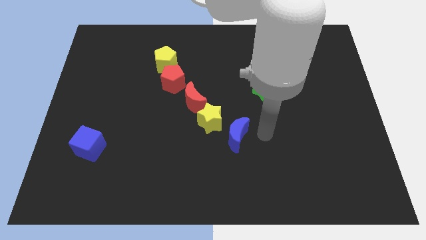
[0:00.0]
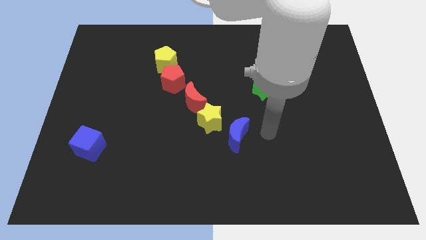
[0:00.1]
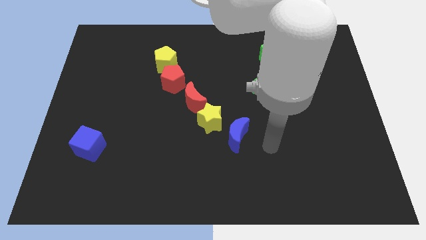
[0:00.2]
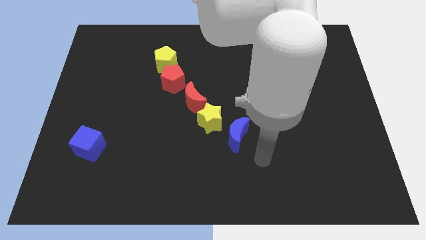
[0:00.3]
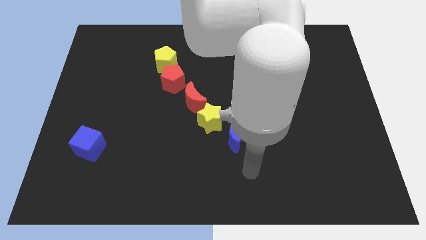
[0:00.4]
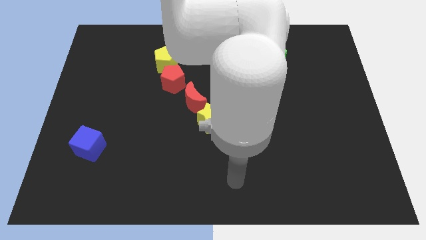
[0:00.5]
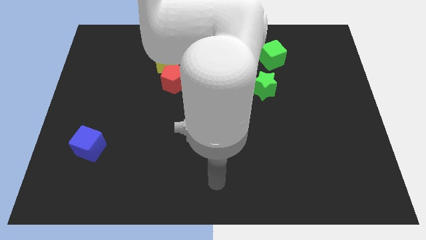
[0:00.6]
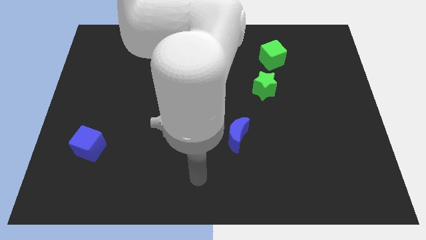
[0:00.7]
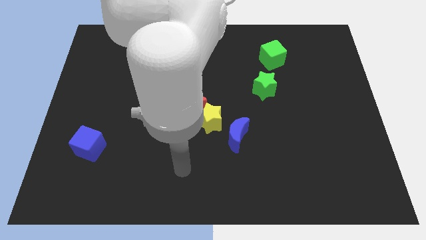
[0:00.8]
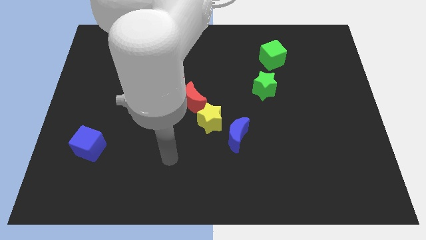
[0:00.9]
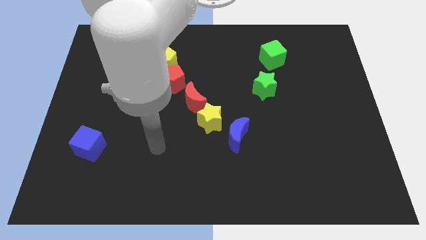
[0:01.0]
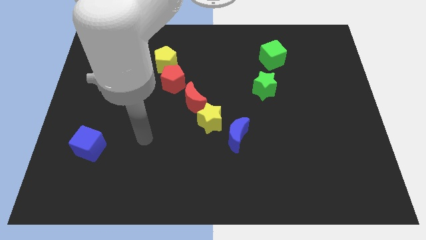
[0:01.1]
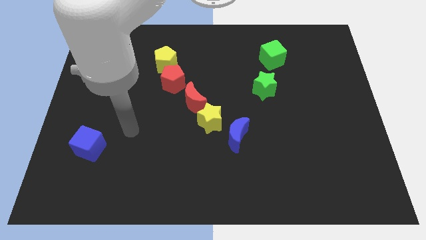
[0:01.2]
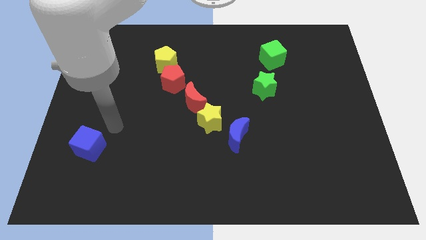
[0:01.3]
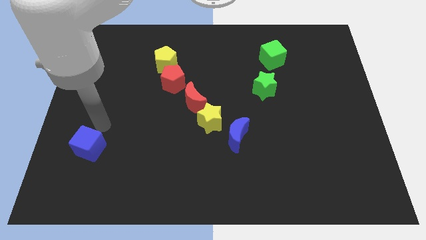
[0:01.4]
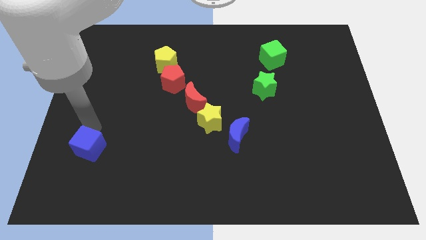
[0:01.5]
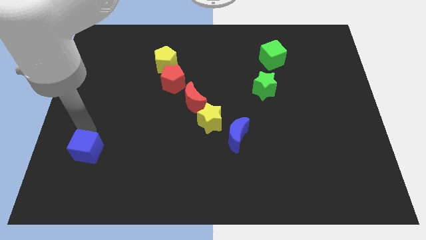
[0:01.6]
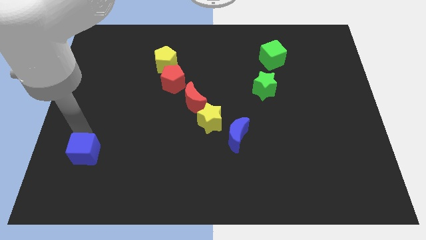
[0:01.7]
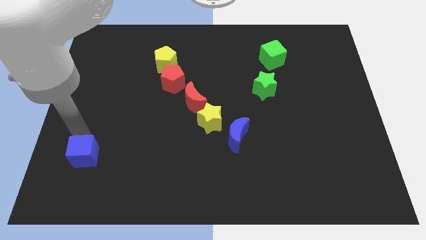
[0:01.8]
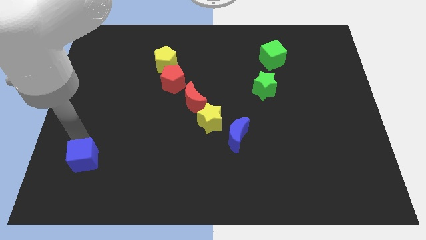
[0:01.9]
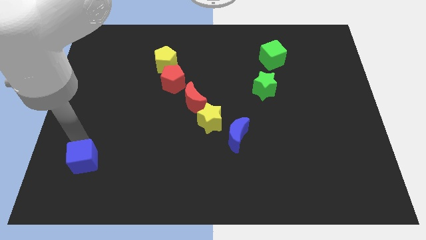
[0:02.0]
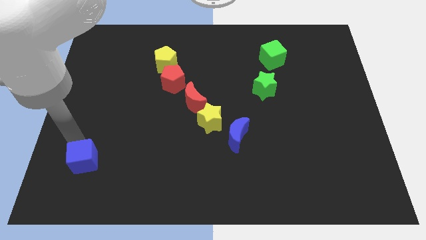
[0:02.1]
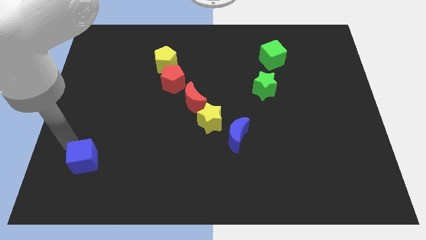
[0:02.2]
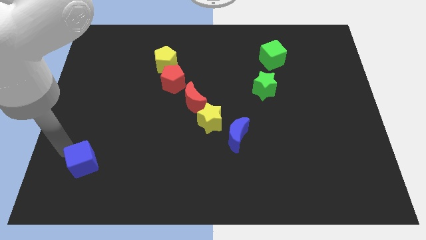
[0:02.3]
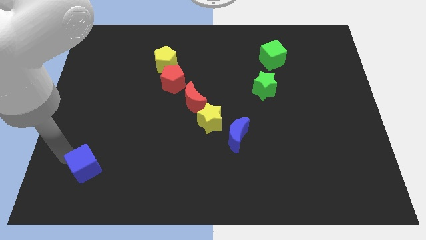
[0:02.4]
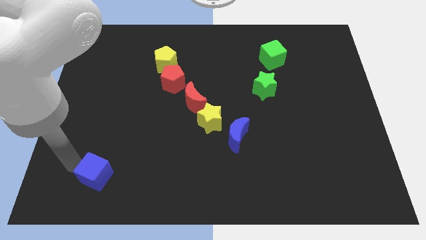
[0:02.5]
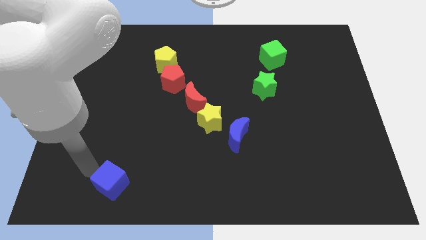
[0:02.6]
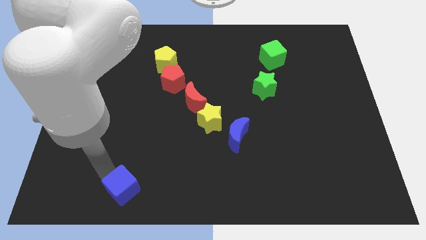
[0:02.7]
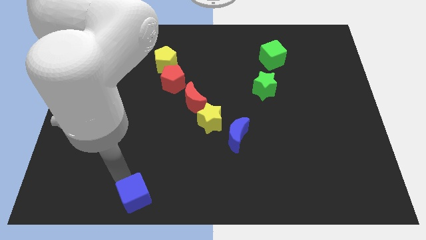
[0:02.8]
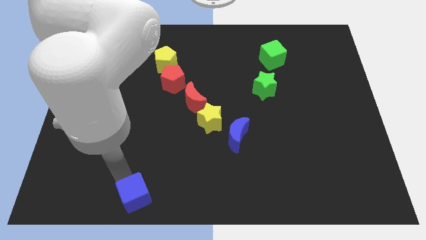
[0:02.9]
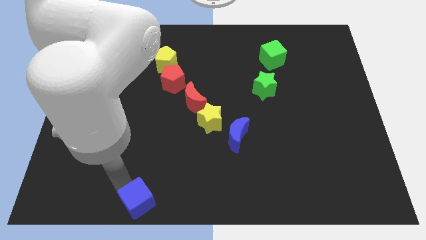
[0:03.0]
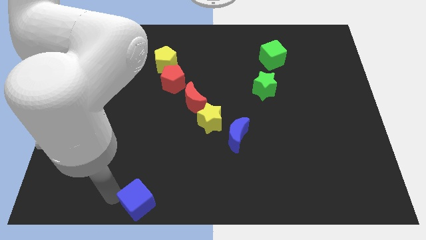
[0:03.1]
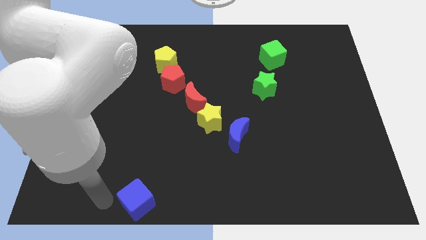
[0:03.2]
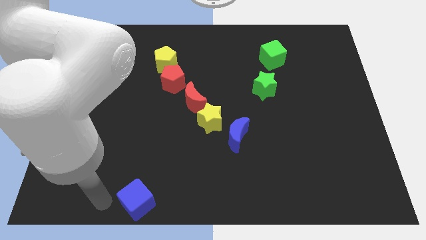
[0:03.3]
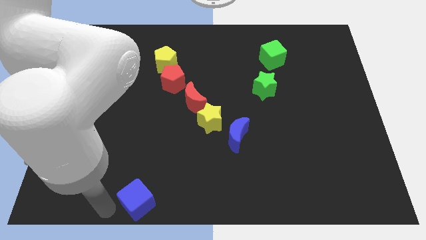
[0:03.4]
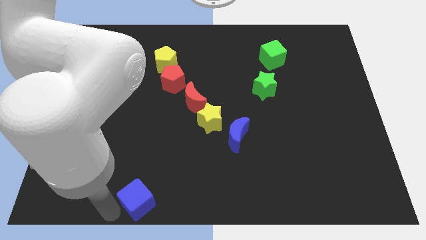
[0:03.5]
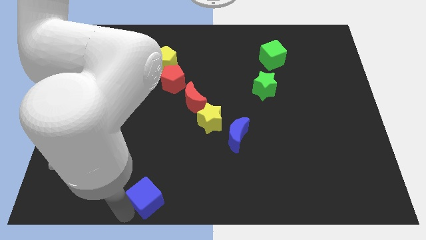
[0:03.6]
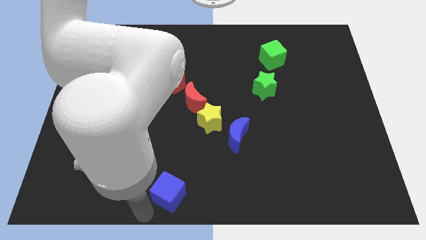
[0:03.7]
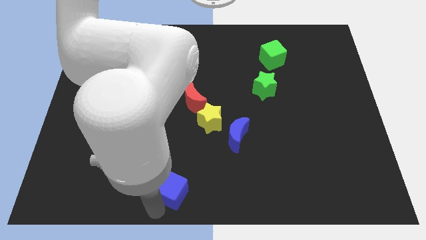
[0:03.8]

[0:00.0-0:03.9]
move blue cube diagonally below to the blue moon

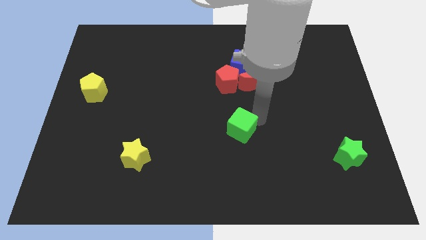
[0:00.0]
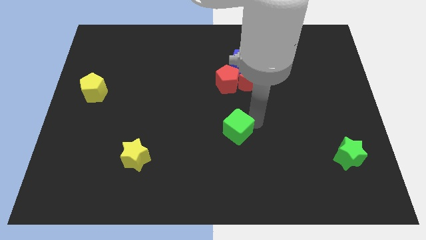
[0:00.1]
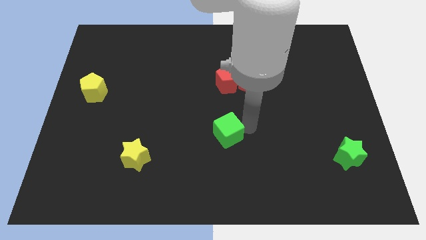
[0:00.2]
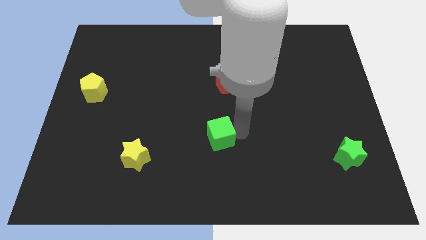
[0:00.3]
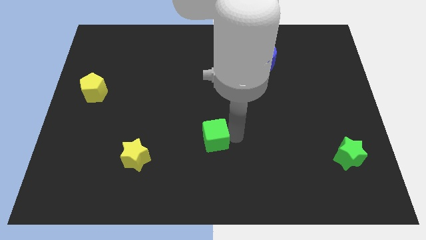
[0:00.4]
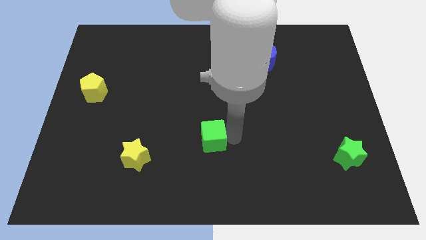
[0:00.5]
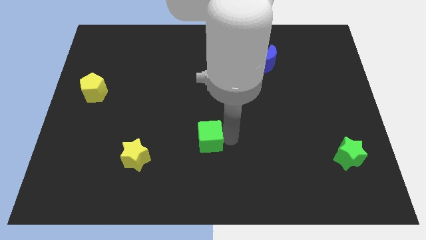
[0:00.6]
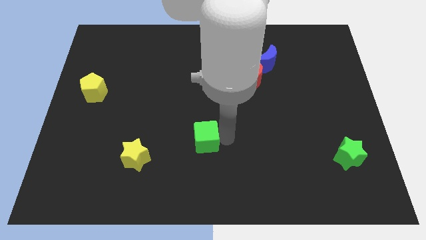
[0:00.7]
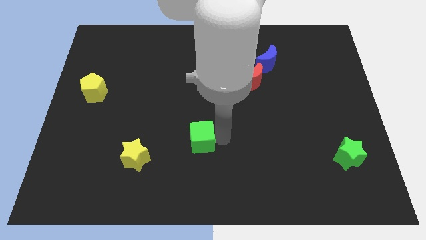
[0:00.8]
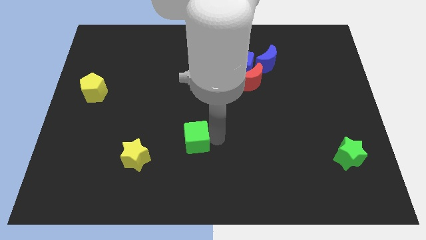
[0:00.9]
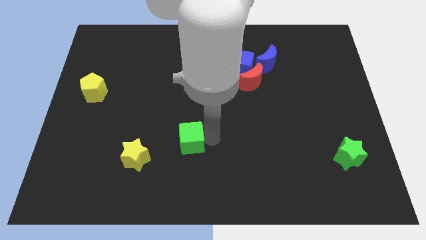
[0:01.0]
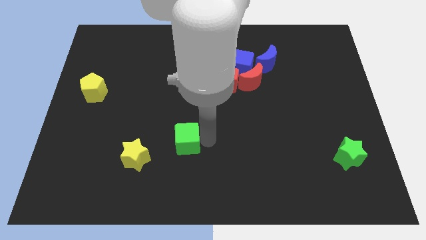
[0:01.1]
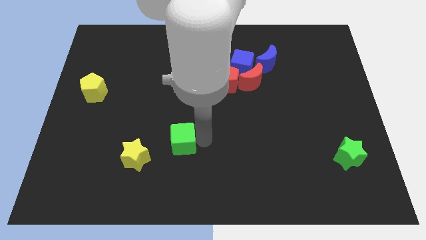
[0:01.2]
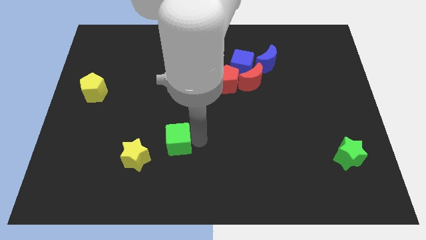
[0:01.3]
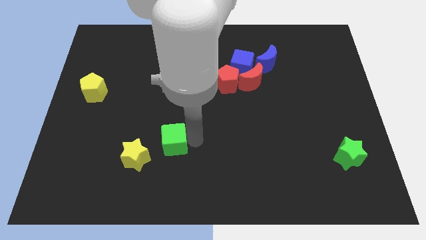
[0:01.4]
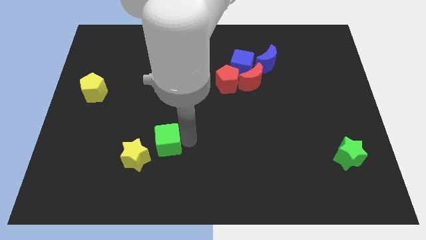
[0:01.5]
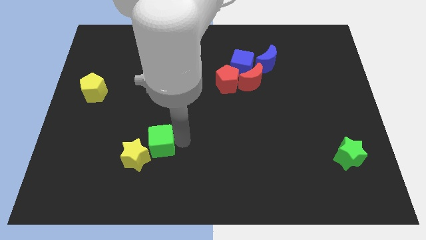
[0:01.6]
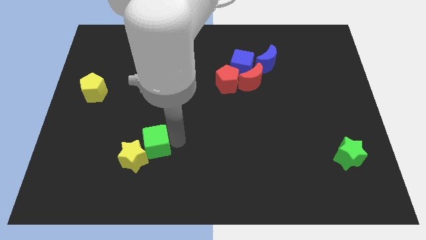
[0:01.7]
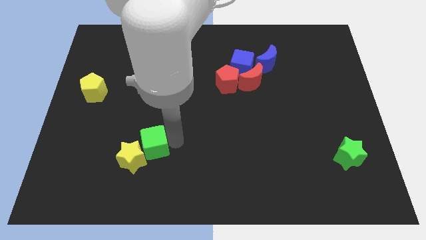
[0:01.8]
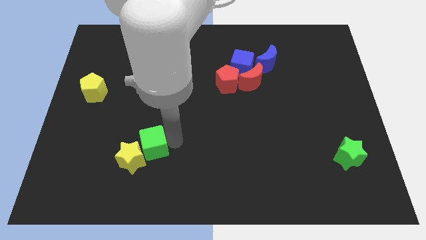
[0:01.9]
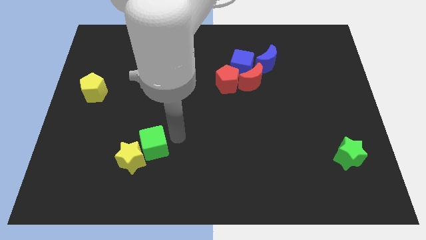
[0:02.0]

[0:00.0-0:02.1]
push the green cube into yellow star

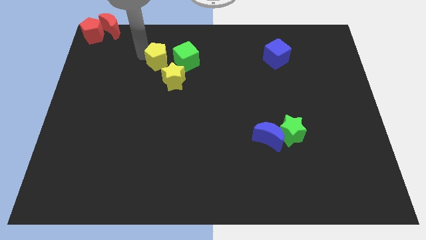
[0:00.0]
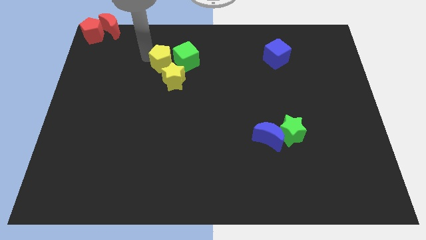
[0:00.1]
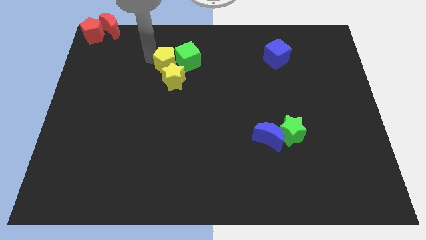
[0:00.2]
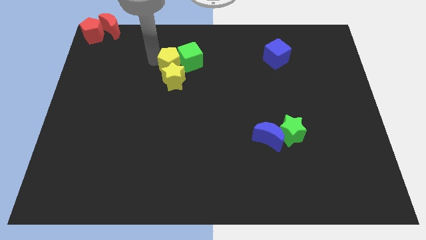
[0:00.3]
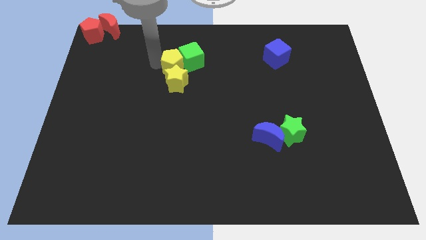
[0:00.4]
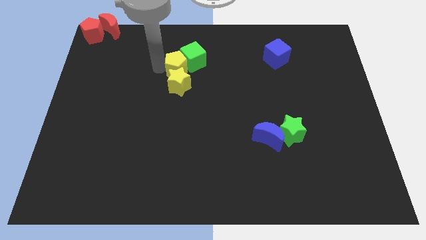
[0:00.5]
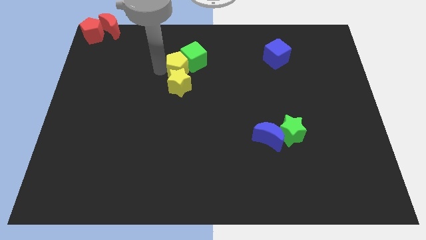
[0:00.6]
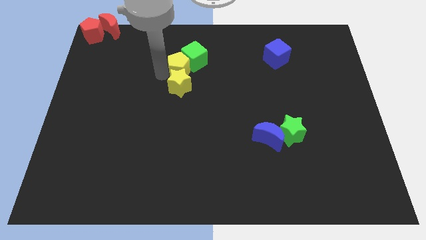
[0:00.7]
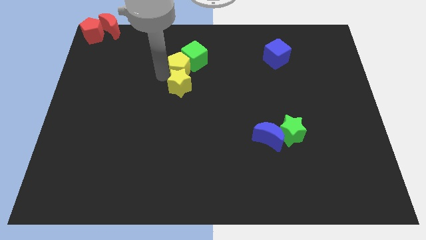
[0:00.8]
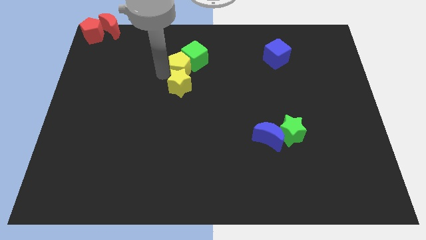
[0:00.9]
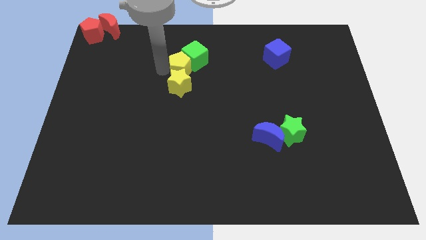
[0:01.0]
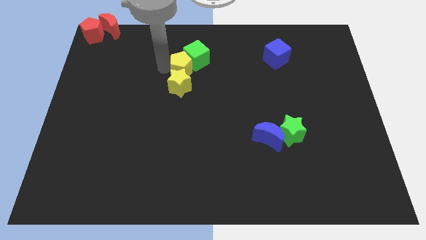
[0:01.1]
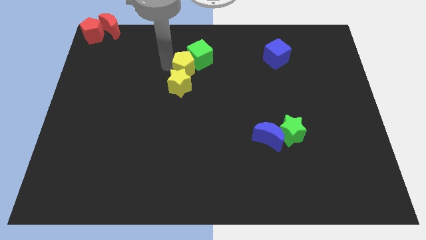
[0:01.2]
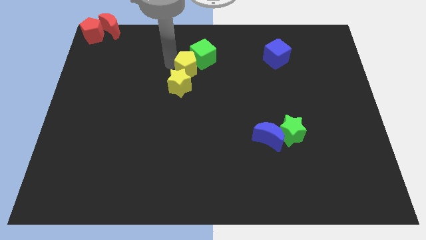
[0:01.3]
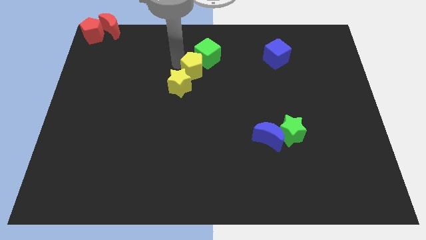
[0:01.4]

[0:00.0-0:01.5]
place the yellow pentagon in between the green cube and yellow star

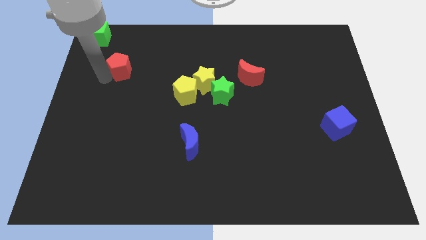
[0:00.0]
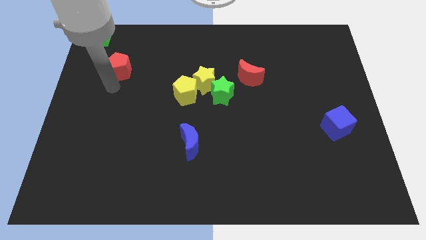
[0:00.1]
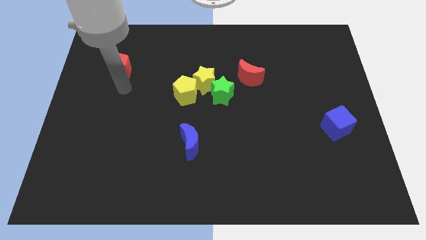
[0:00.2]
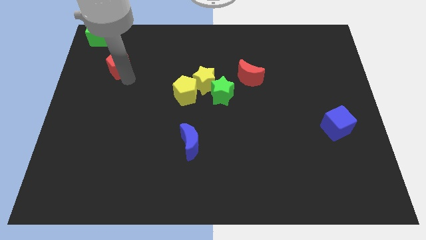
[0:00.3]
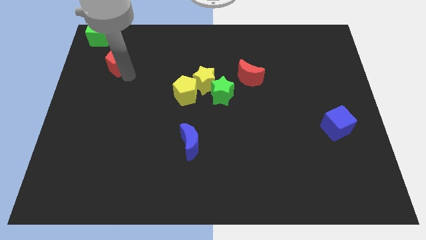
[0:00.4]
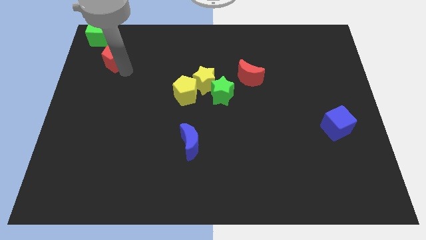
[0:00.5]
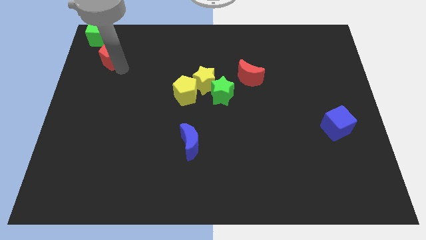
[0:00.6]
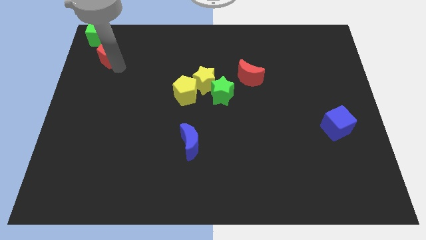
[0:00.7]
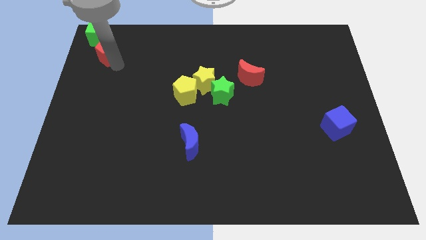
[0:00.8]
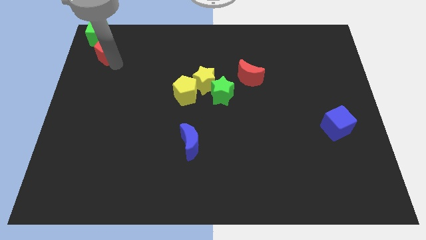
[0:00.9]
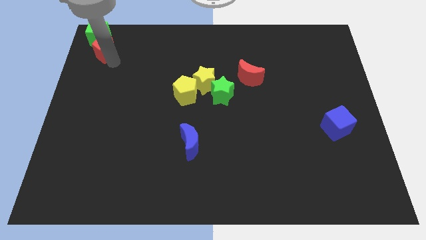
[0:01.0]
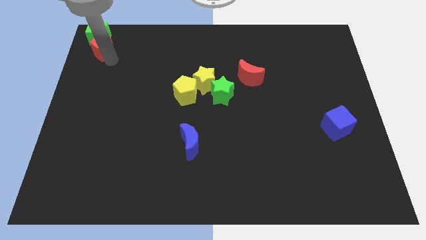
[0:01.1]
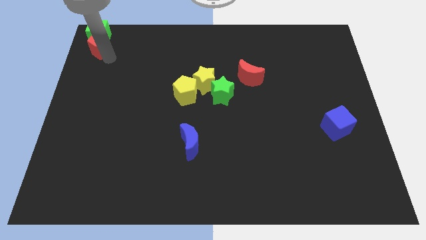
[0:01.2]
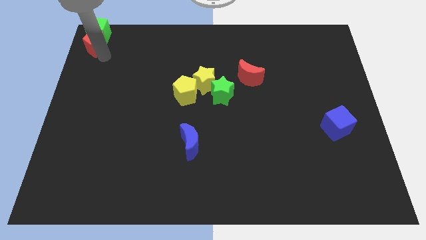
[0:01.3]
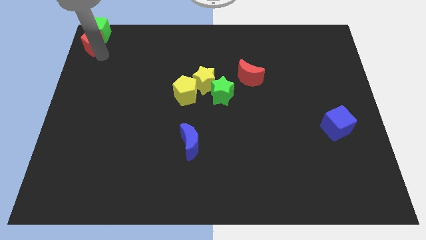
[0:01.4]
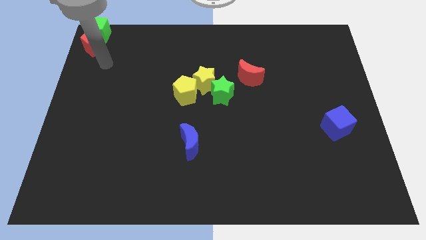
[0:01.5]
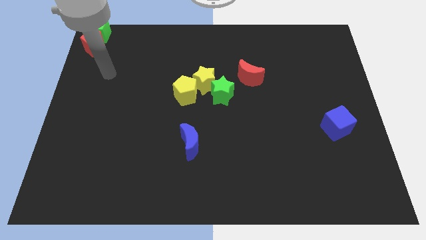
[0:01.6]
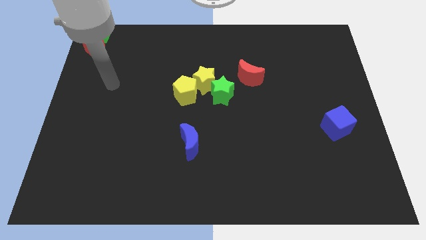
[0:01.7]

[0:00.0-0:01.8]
push the red pentagon towards the green cube
